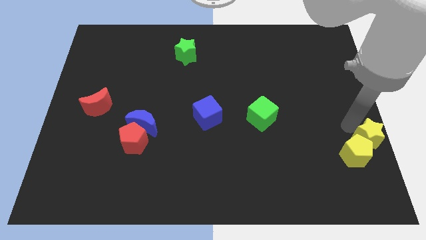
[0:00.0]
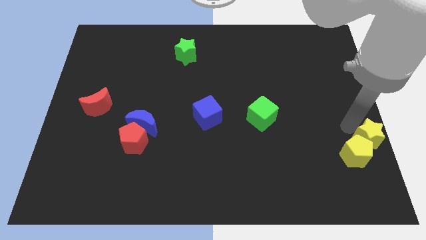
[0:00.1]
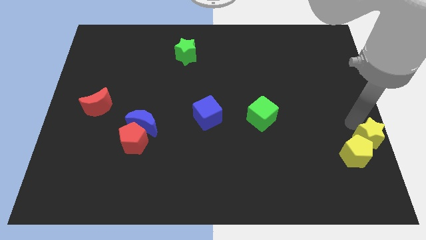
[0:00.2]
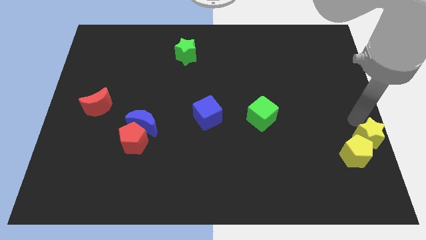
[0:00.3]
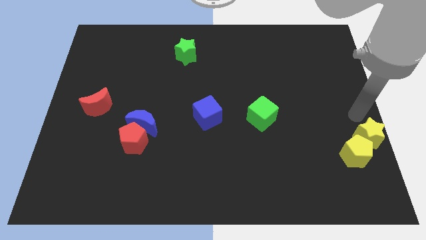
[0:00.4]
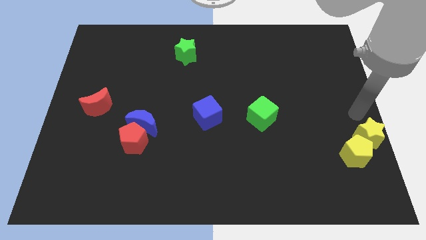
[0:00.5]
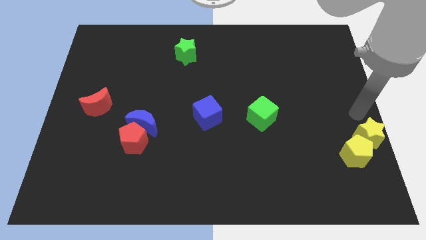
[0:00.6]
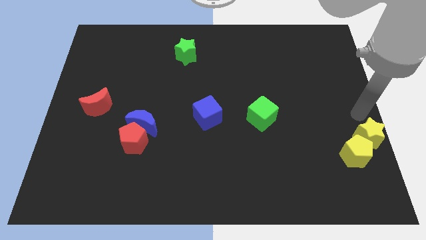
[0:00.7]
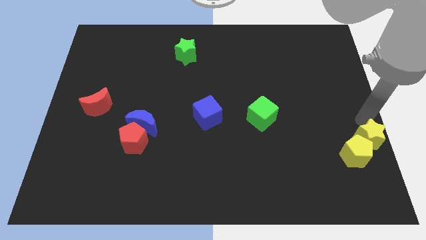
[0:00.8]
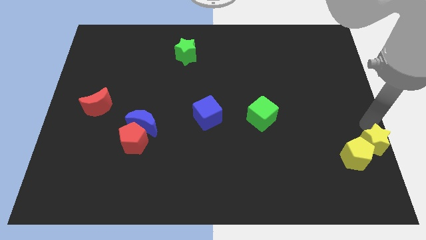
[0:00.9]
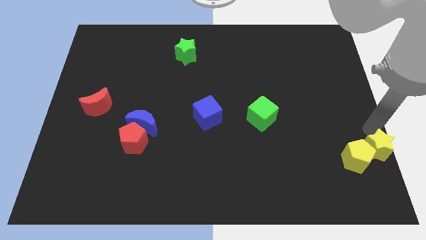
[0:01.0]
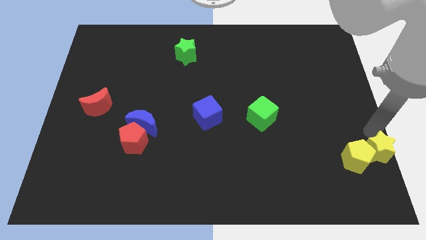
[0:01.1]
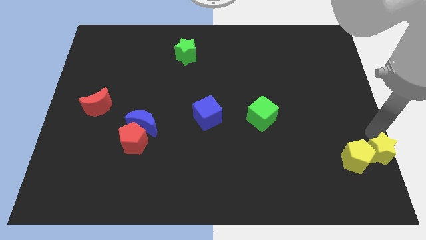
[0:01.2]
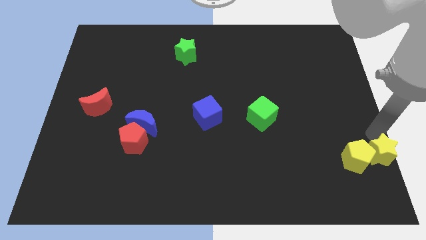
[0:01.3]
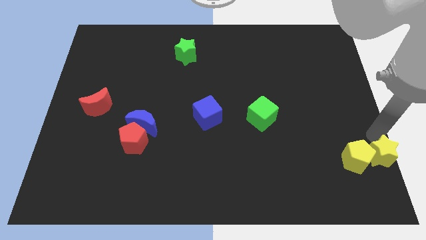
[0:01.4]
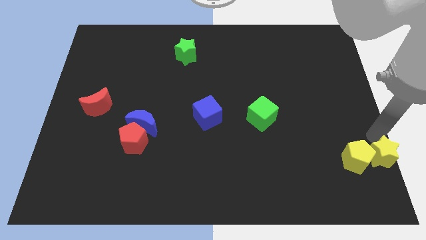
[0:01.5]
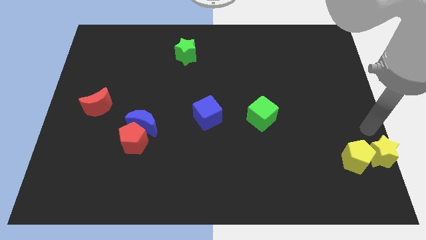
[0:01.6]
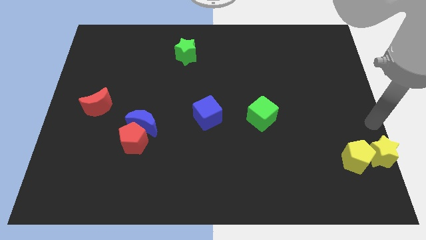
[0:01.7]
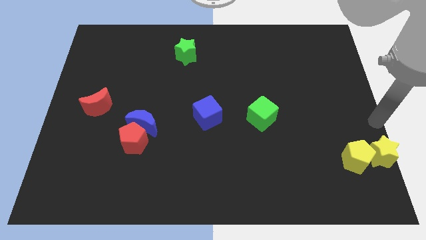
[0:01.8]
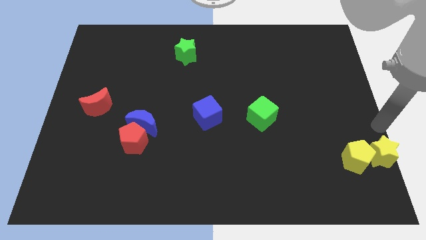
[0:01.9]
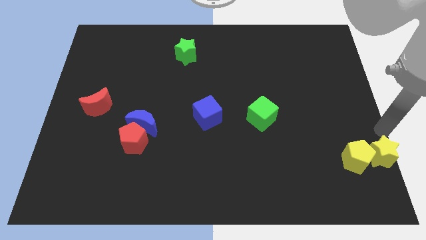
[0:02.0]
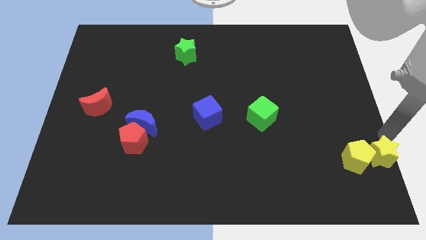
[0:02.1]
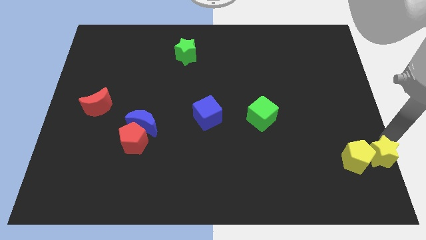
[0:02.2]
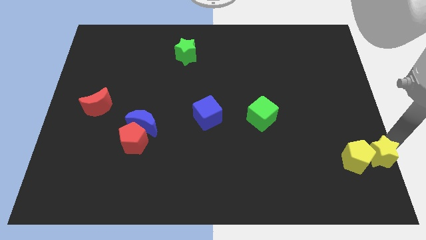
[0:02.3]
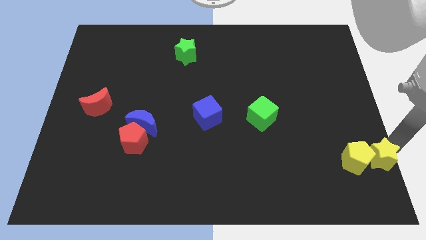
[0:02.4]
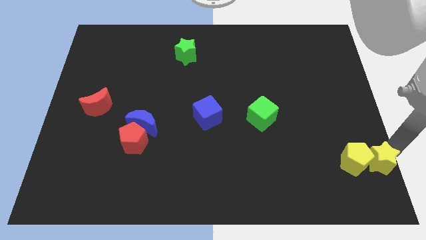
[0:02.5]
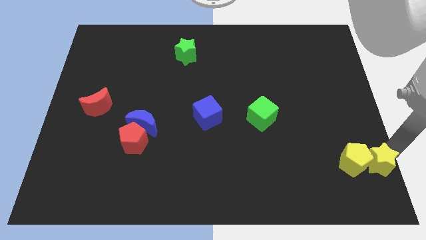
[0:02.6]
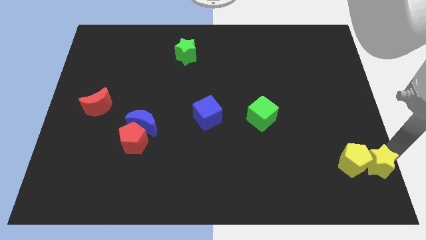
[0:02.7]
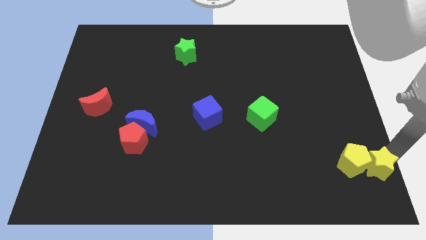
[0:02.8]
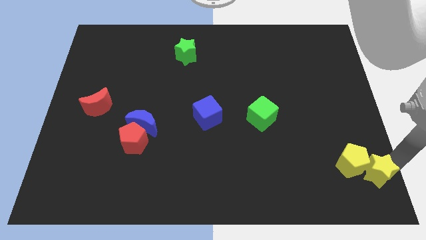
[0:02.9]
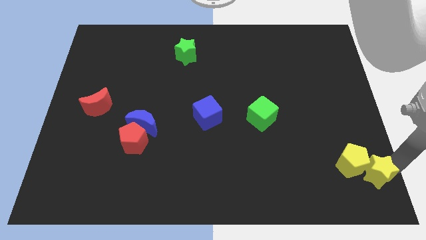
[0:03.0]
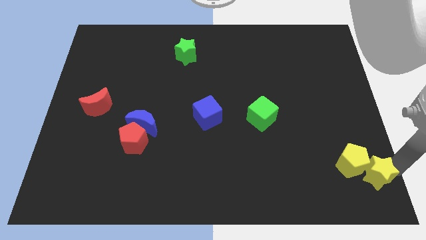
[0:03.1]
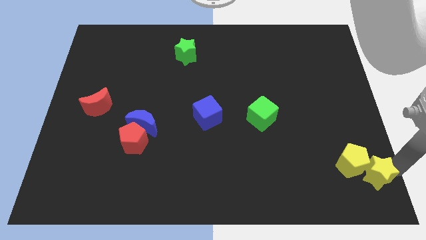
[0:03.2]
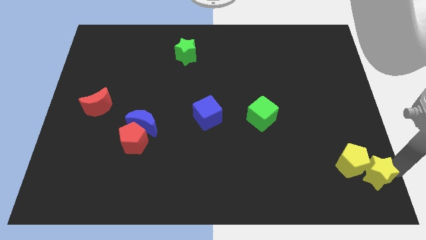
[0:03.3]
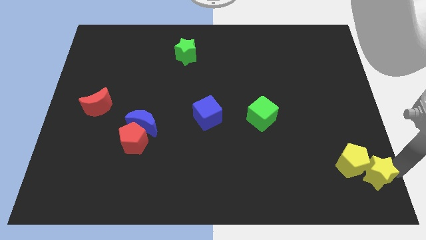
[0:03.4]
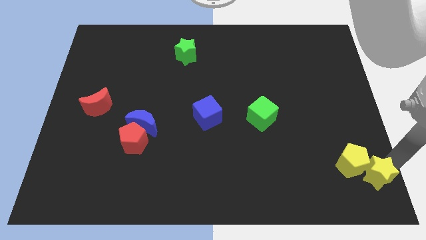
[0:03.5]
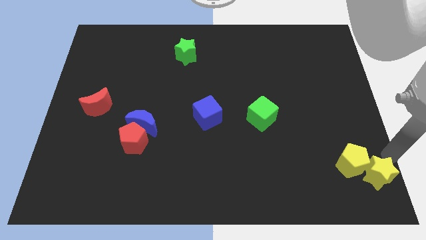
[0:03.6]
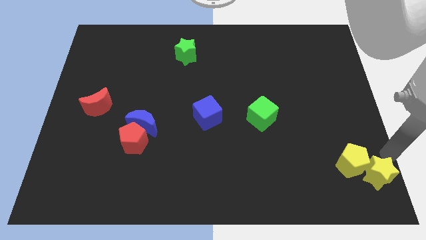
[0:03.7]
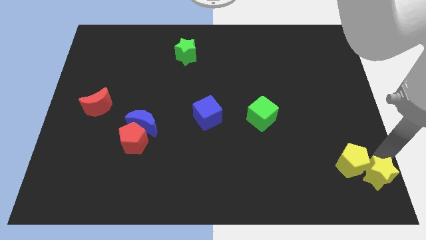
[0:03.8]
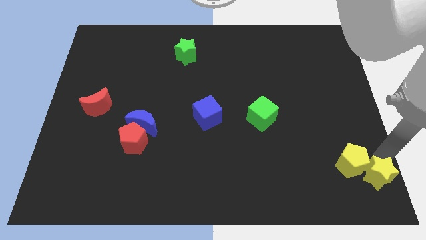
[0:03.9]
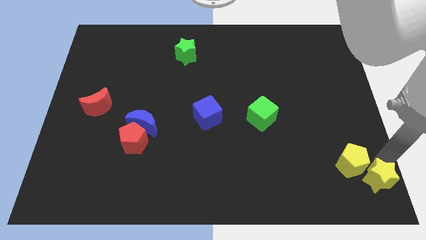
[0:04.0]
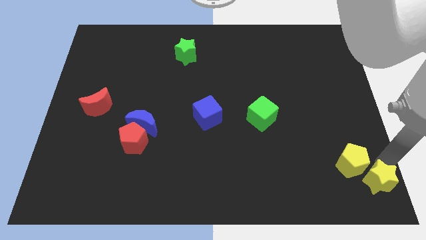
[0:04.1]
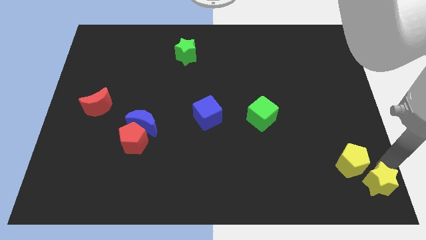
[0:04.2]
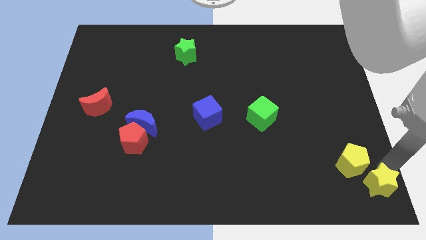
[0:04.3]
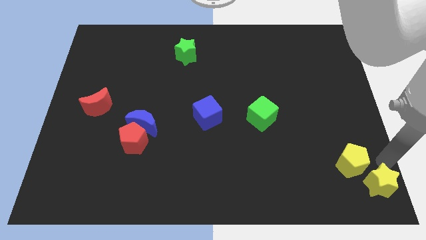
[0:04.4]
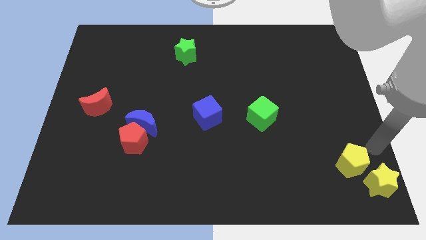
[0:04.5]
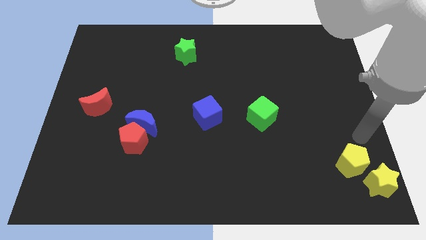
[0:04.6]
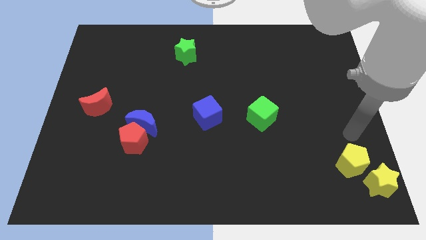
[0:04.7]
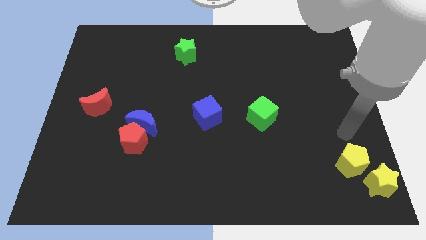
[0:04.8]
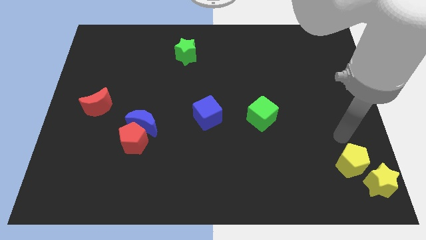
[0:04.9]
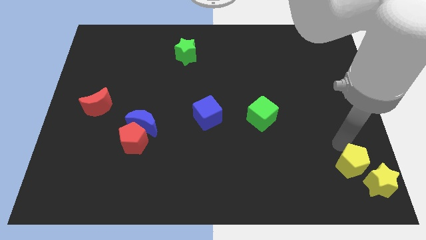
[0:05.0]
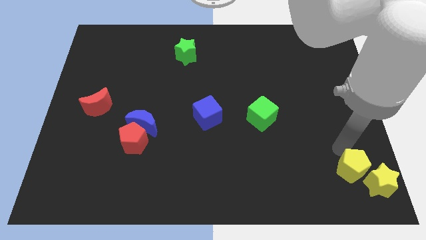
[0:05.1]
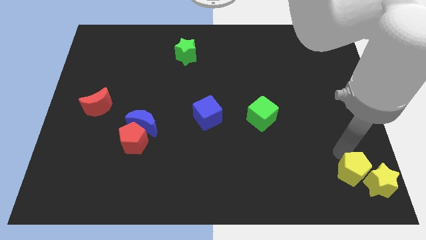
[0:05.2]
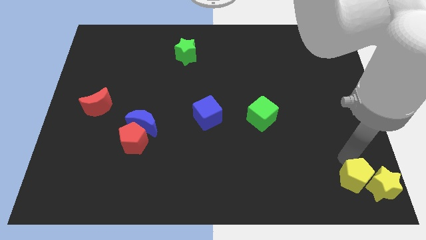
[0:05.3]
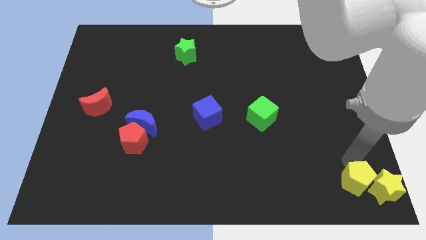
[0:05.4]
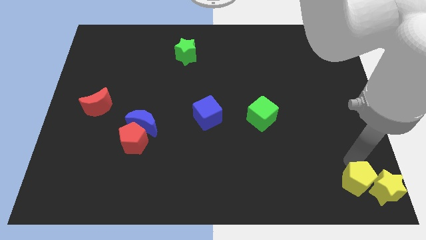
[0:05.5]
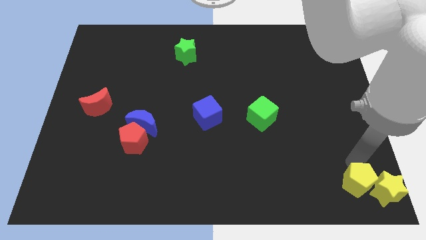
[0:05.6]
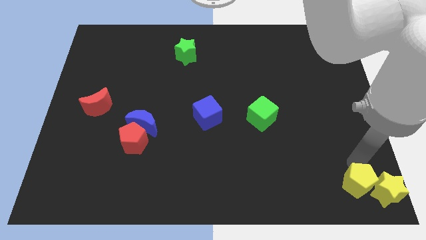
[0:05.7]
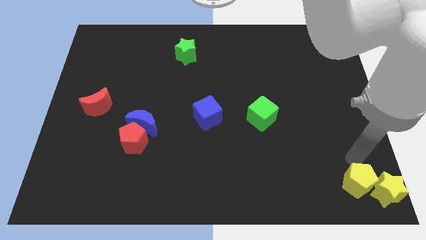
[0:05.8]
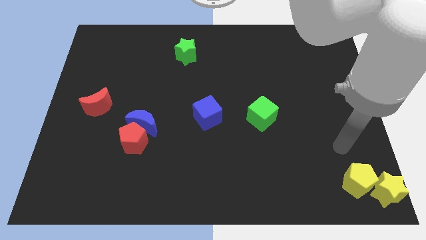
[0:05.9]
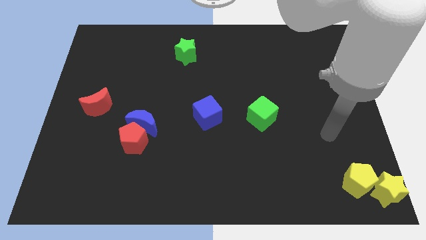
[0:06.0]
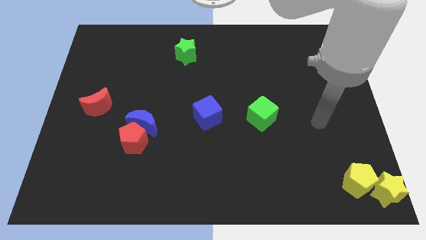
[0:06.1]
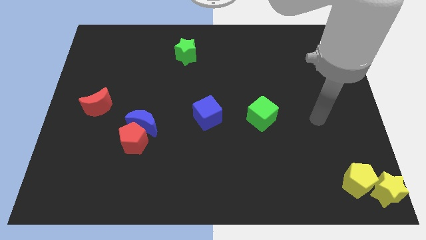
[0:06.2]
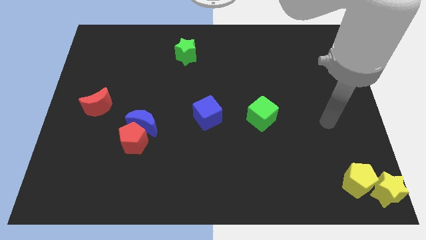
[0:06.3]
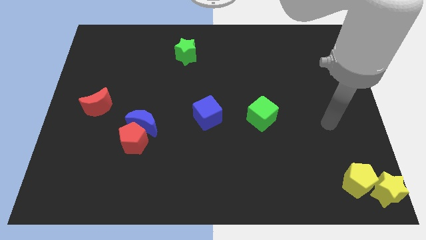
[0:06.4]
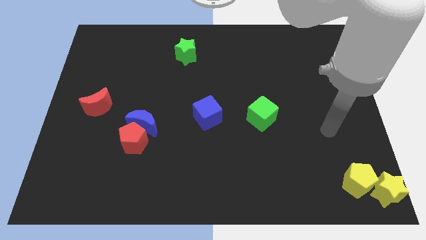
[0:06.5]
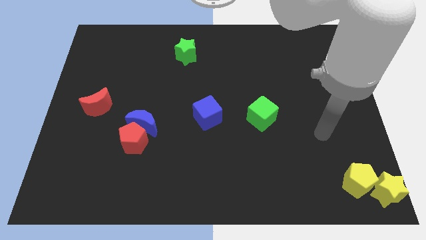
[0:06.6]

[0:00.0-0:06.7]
place the yellow blocks to the bottom right corner of the board

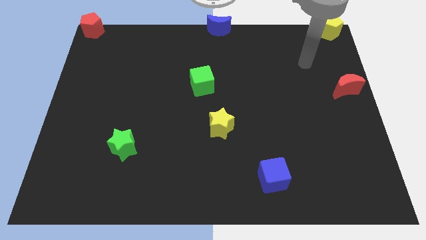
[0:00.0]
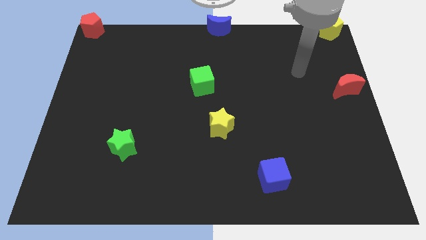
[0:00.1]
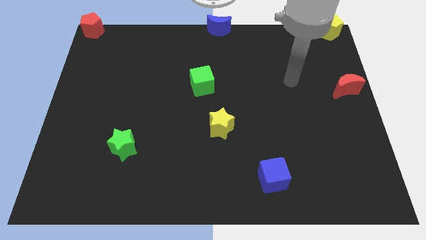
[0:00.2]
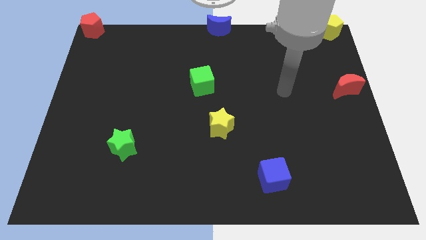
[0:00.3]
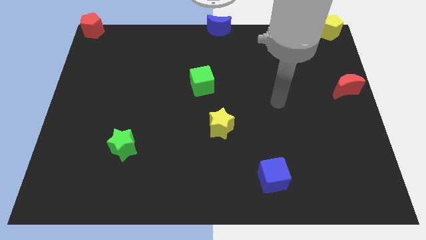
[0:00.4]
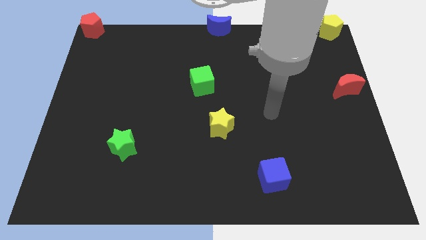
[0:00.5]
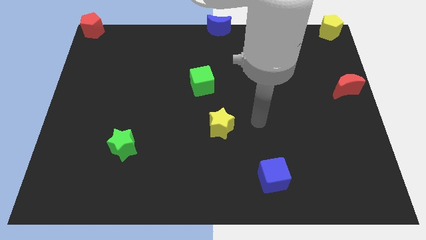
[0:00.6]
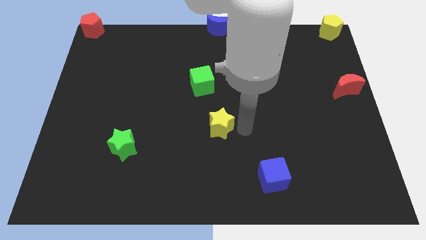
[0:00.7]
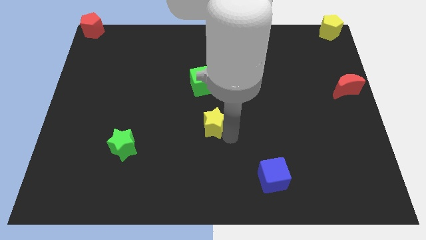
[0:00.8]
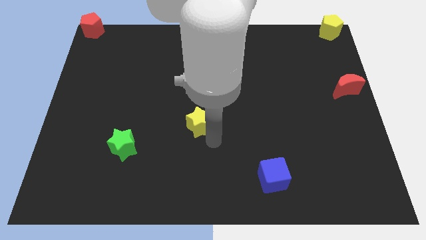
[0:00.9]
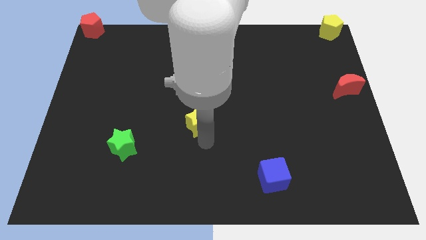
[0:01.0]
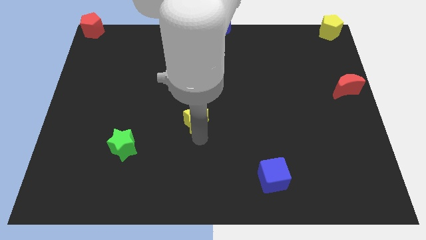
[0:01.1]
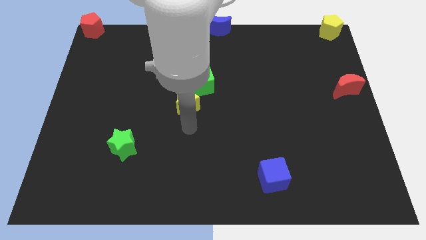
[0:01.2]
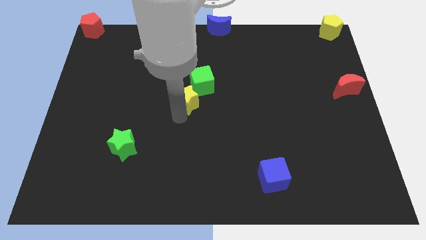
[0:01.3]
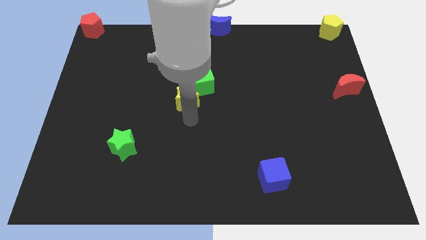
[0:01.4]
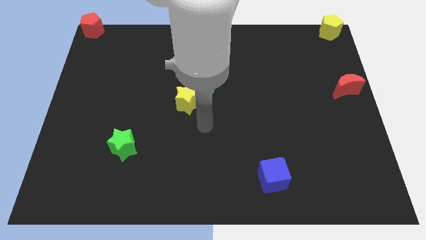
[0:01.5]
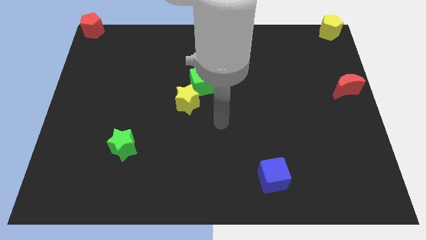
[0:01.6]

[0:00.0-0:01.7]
move the yellow star towards the left bottom of the green cube

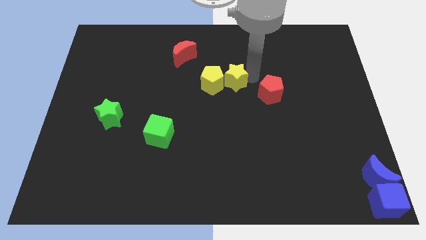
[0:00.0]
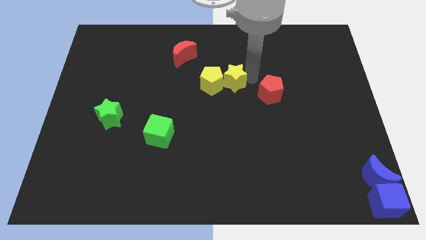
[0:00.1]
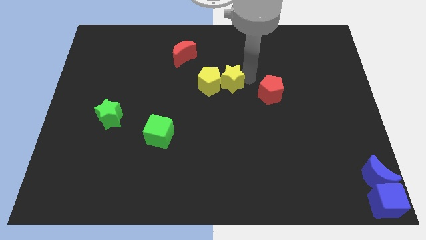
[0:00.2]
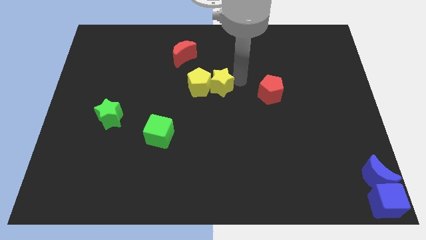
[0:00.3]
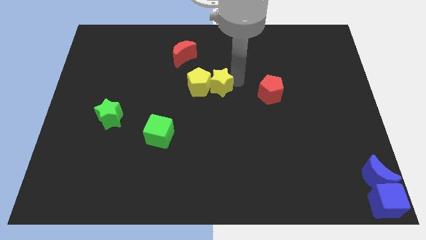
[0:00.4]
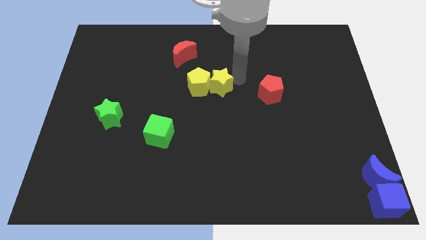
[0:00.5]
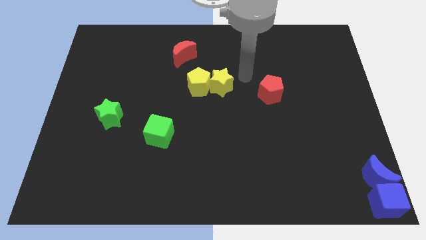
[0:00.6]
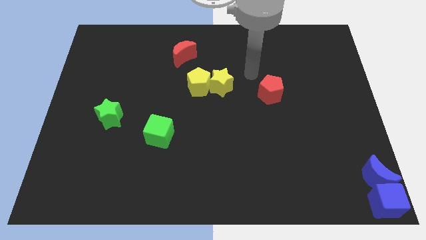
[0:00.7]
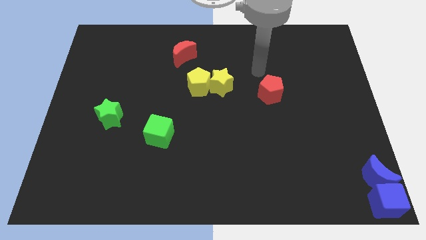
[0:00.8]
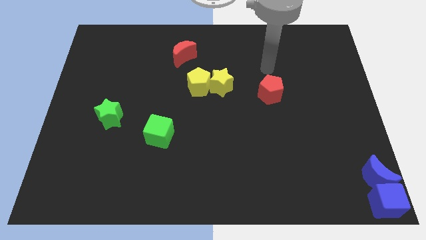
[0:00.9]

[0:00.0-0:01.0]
push the yellow pentagon slightly with the help of the yellow star to the center of the board
